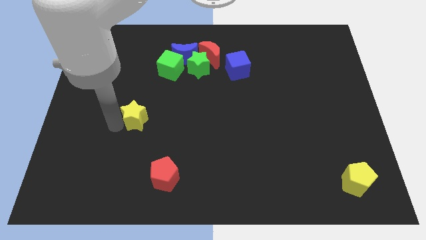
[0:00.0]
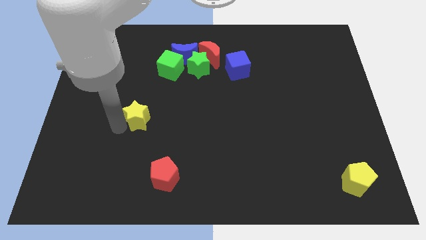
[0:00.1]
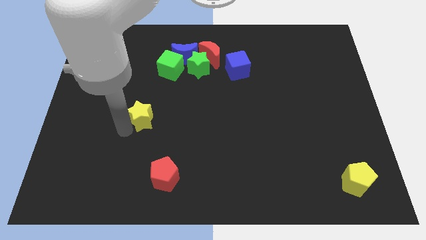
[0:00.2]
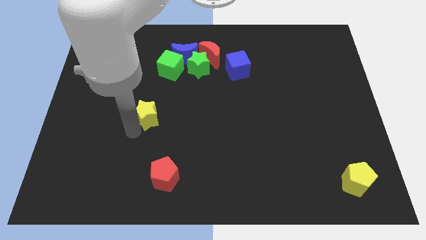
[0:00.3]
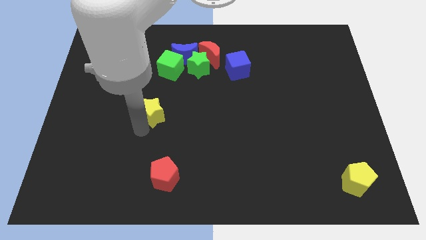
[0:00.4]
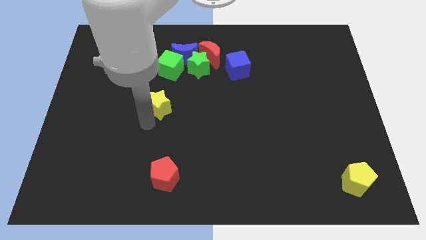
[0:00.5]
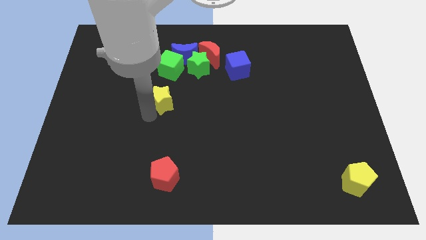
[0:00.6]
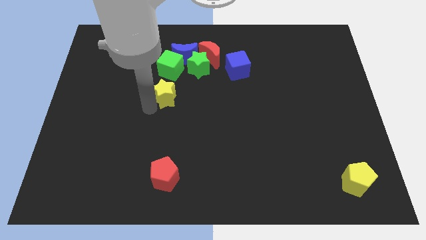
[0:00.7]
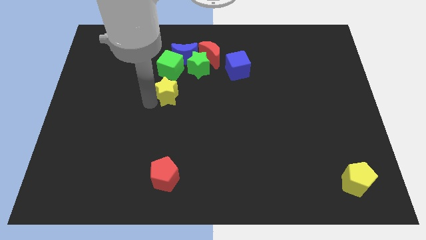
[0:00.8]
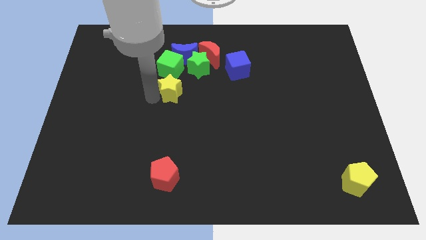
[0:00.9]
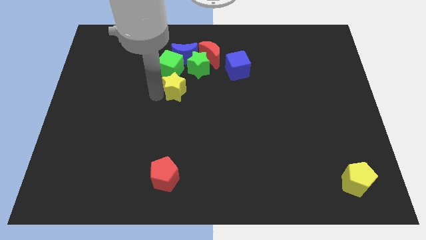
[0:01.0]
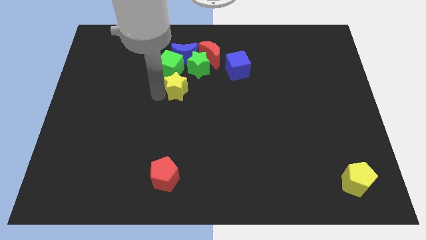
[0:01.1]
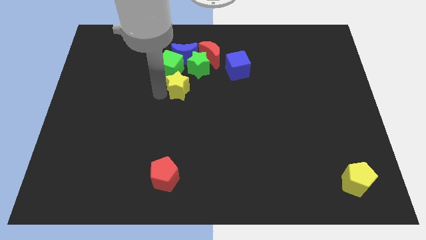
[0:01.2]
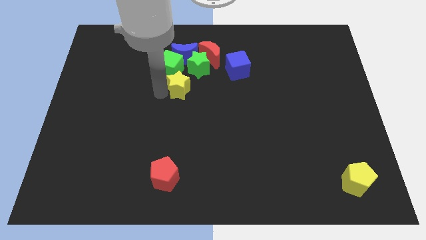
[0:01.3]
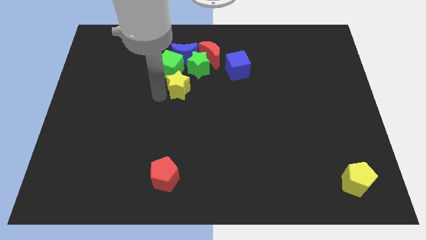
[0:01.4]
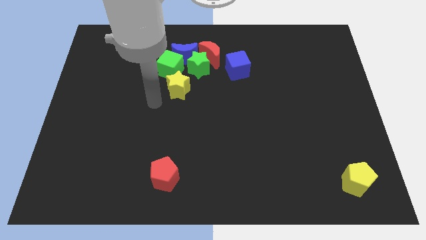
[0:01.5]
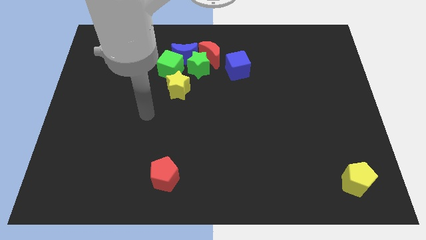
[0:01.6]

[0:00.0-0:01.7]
place yellow star below the green cube

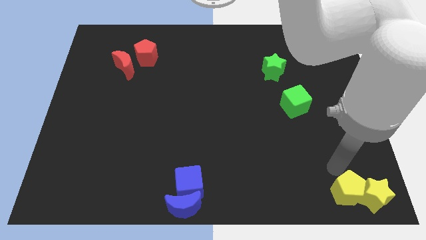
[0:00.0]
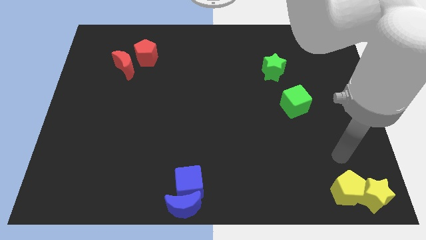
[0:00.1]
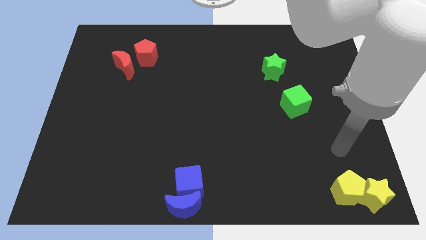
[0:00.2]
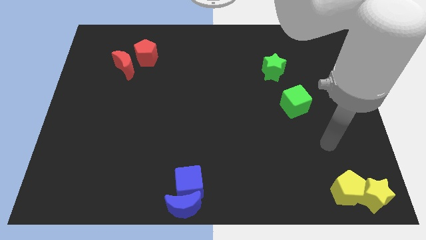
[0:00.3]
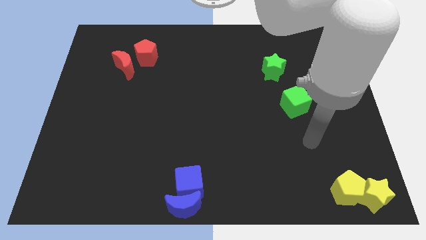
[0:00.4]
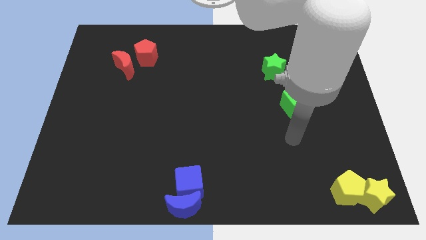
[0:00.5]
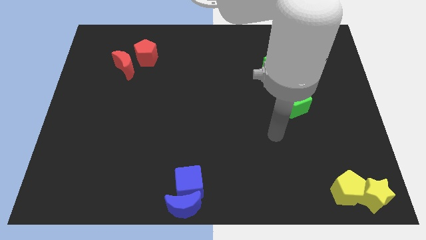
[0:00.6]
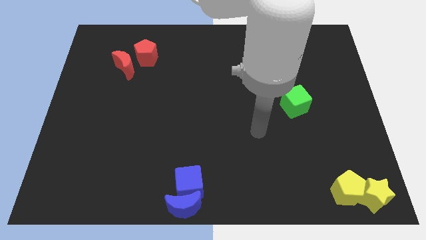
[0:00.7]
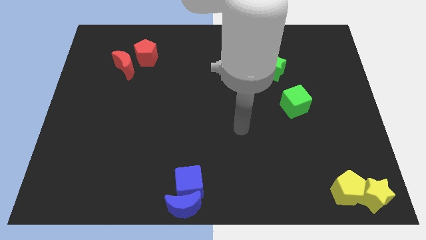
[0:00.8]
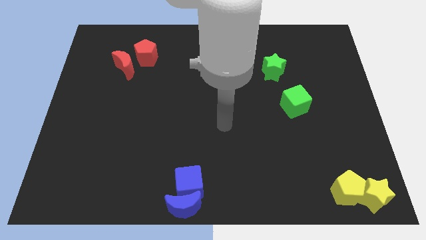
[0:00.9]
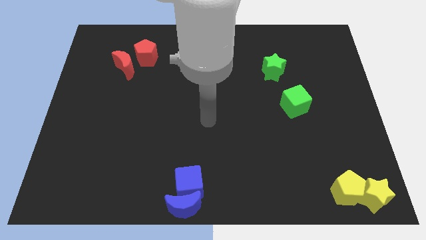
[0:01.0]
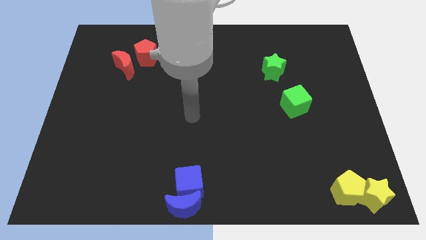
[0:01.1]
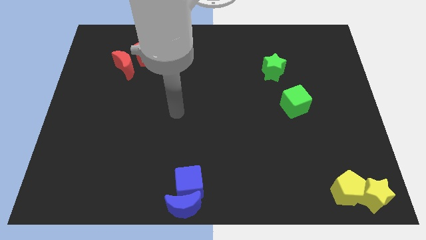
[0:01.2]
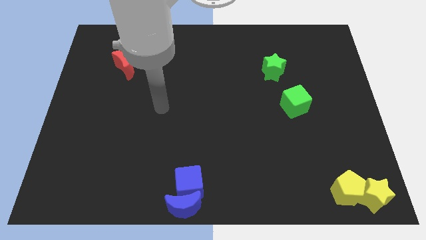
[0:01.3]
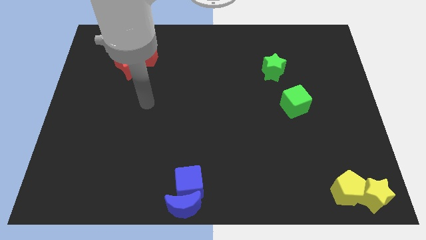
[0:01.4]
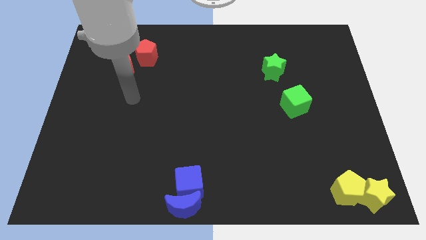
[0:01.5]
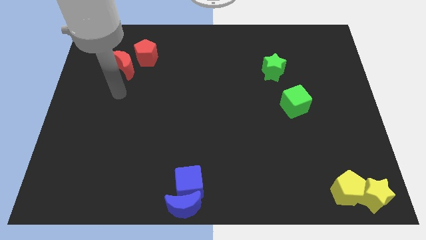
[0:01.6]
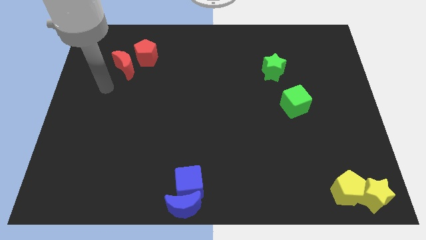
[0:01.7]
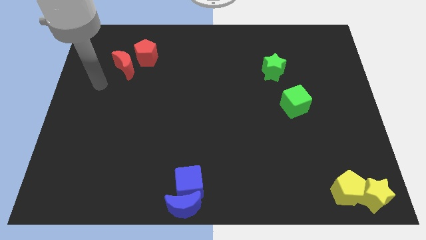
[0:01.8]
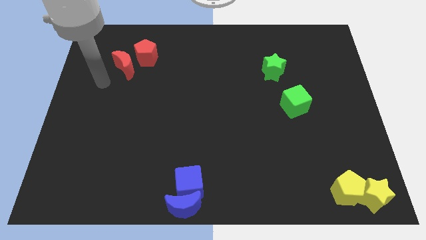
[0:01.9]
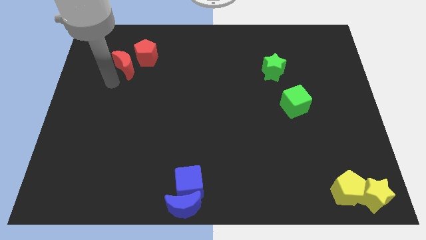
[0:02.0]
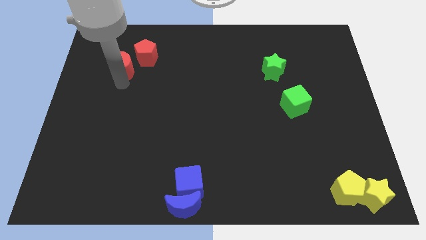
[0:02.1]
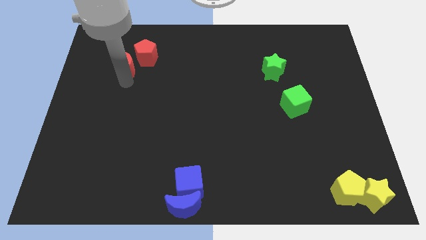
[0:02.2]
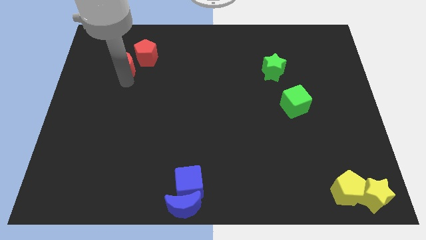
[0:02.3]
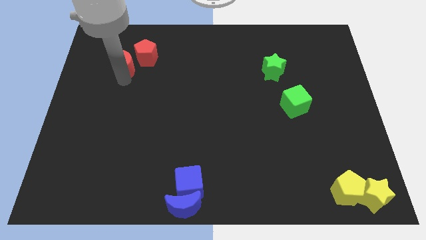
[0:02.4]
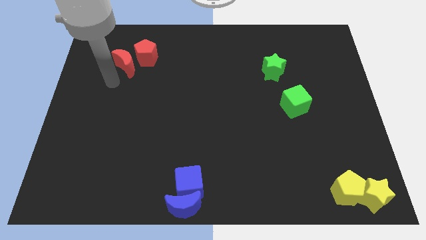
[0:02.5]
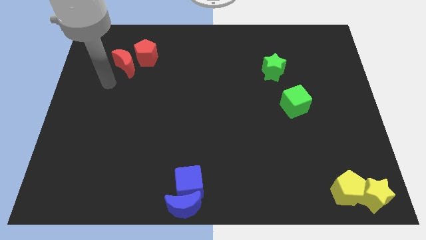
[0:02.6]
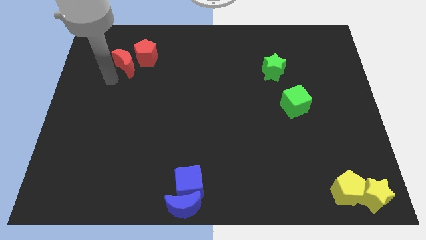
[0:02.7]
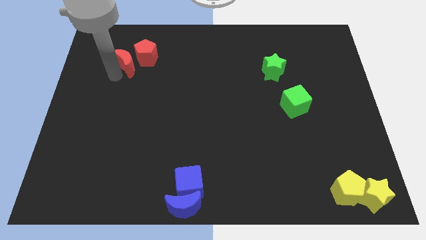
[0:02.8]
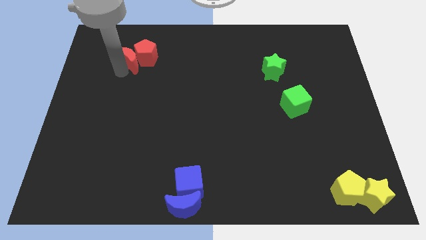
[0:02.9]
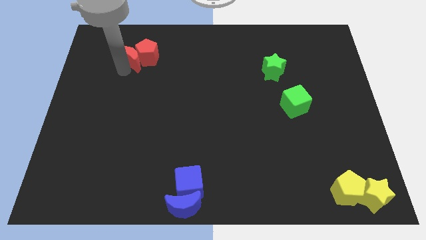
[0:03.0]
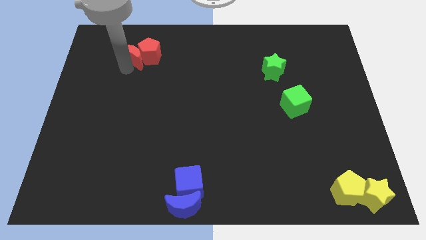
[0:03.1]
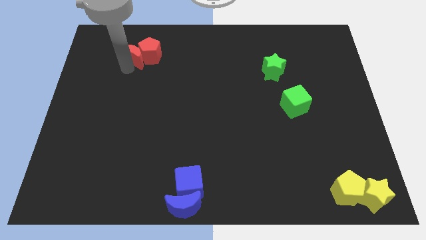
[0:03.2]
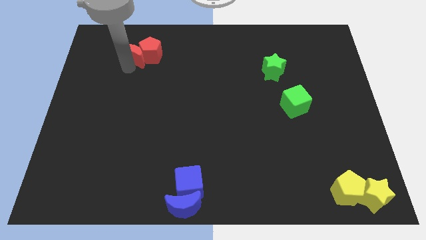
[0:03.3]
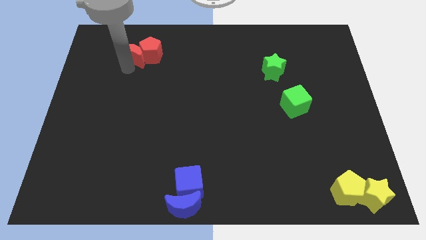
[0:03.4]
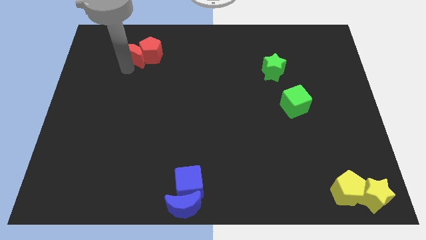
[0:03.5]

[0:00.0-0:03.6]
push the red blocks slightly to the top

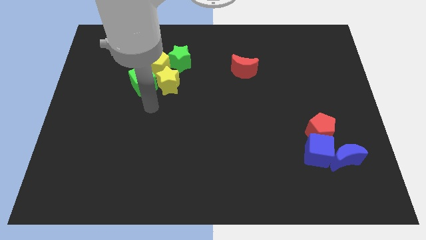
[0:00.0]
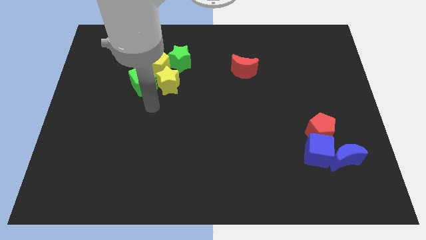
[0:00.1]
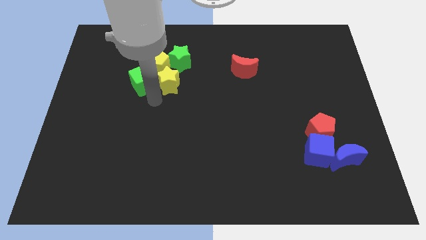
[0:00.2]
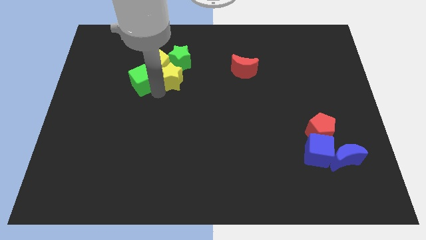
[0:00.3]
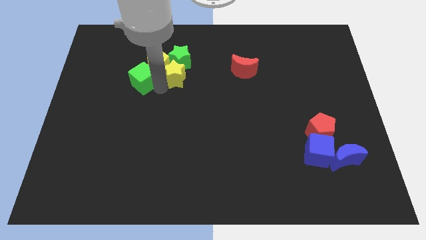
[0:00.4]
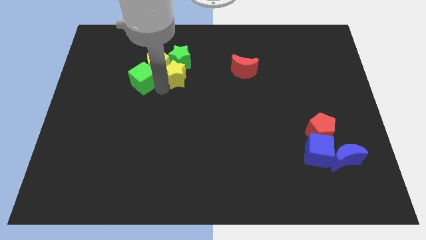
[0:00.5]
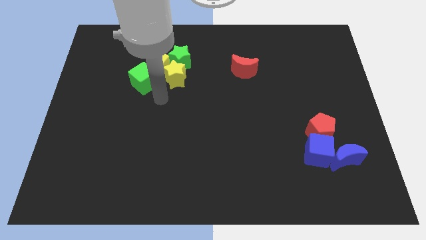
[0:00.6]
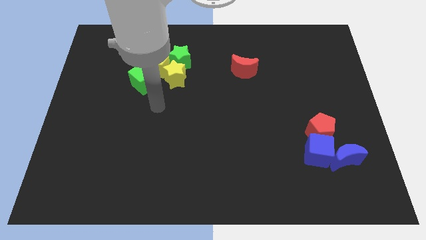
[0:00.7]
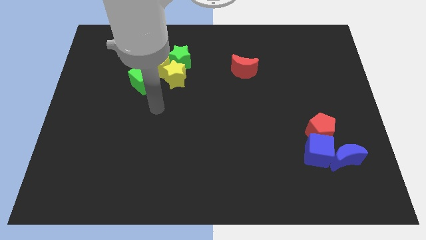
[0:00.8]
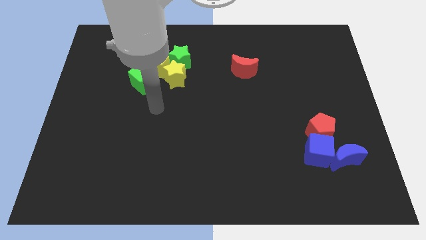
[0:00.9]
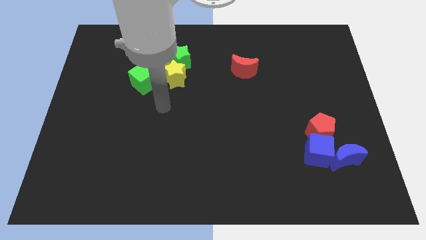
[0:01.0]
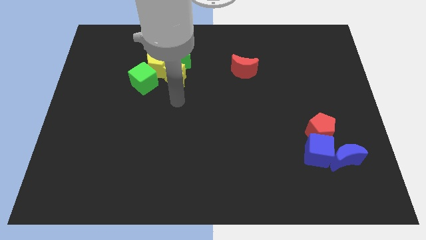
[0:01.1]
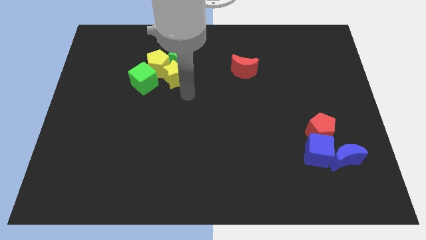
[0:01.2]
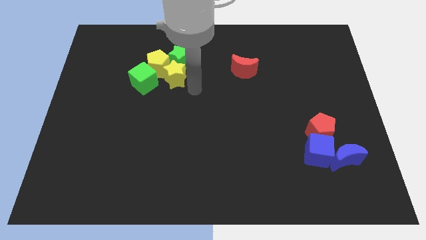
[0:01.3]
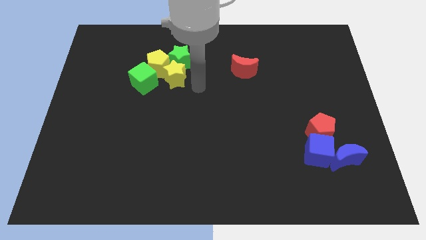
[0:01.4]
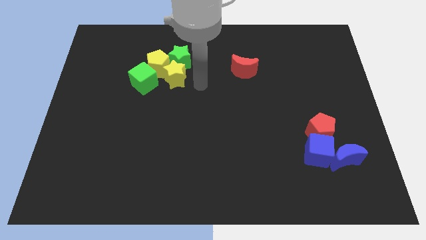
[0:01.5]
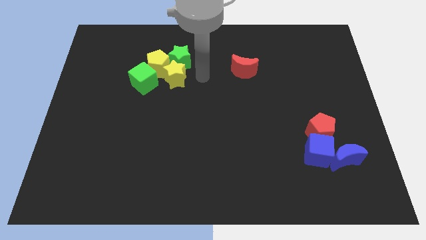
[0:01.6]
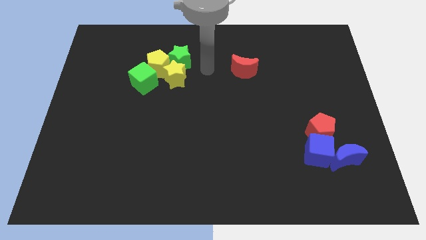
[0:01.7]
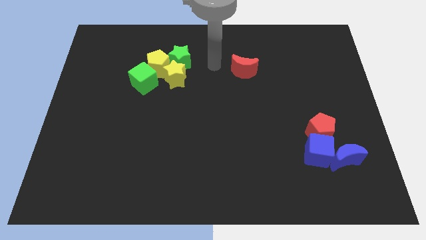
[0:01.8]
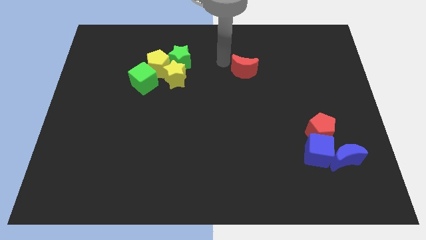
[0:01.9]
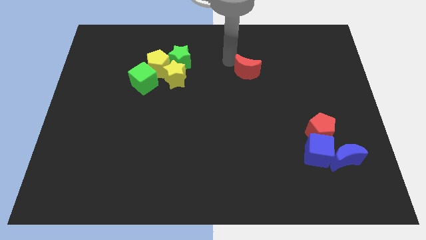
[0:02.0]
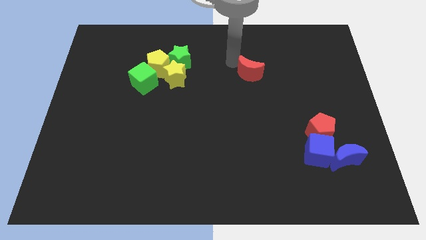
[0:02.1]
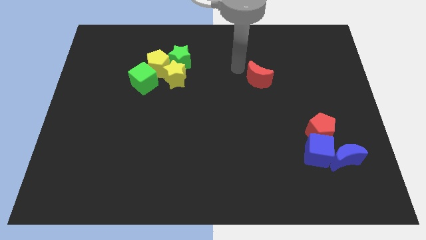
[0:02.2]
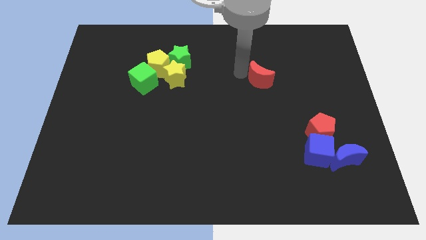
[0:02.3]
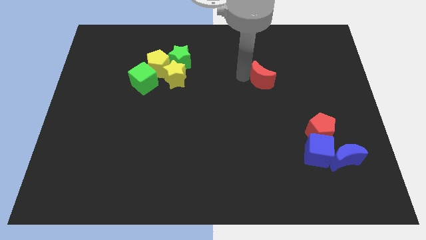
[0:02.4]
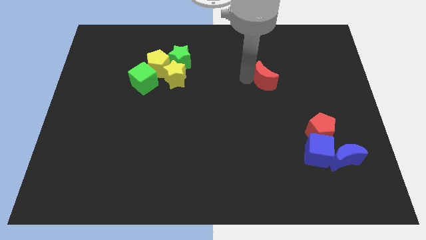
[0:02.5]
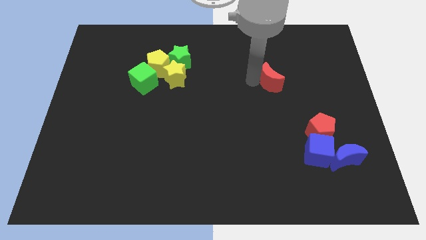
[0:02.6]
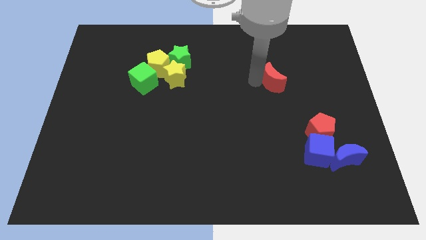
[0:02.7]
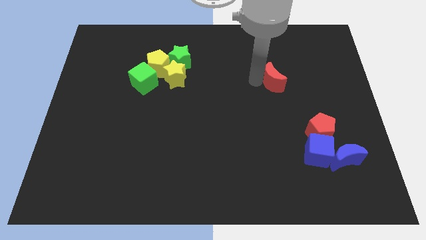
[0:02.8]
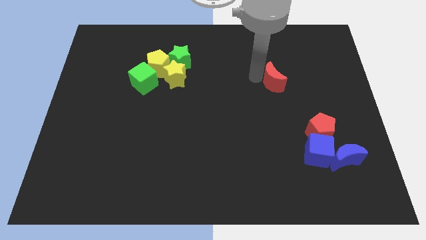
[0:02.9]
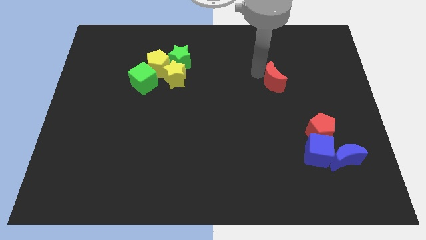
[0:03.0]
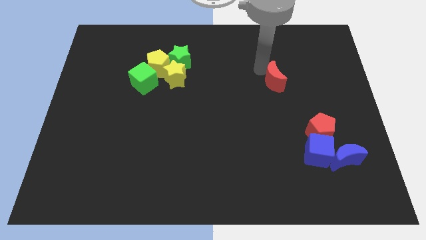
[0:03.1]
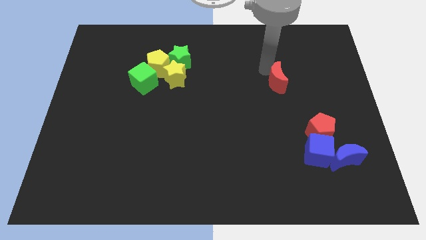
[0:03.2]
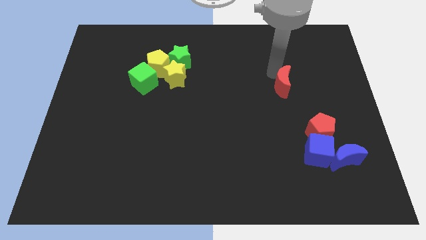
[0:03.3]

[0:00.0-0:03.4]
move the red moon diagonally to the red pentagon

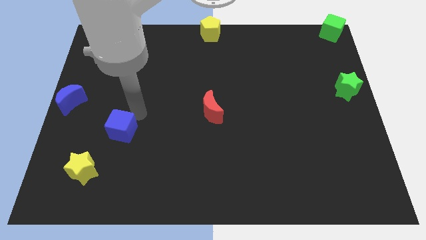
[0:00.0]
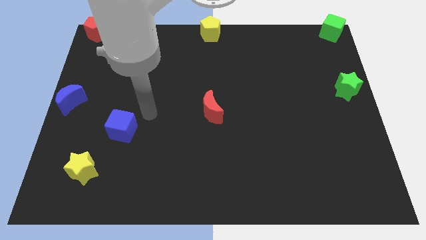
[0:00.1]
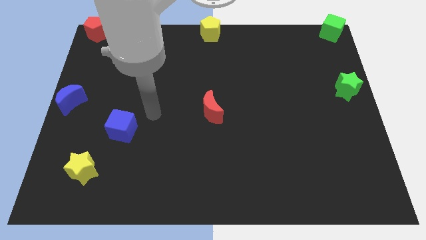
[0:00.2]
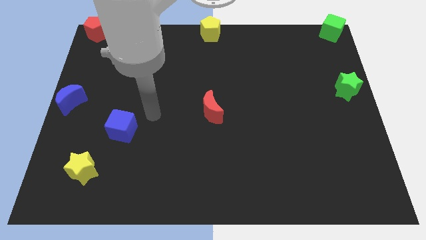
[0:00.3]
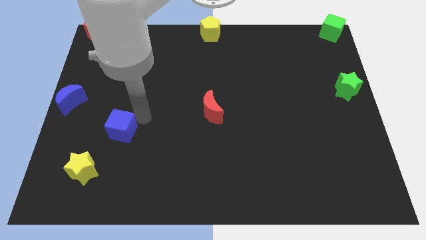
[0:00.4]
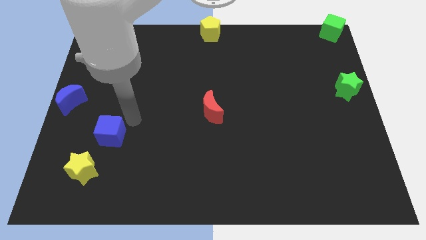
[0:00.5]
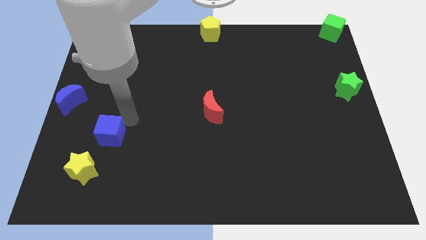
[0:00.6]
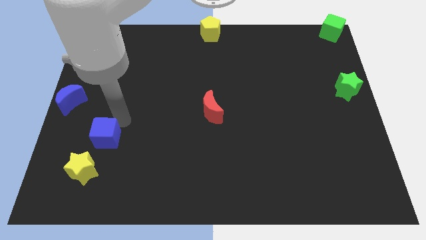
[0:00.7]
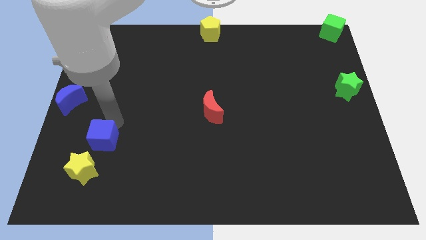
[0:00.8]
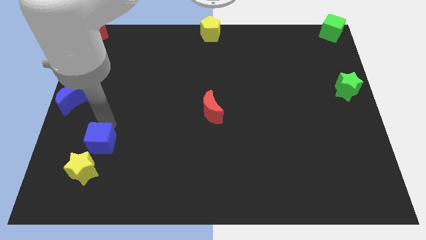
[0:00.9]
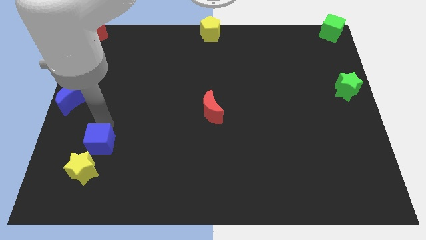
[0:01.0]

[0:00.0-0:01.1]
move the blue cube close to the yellow star
